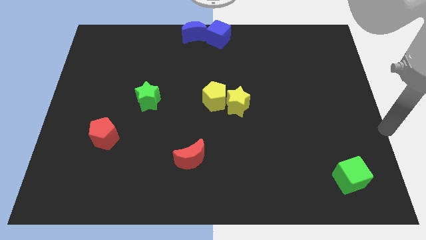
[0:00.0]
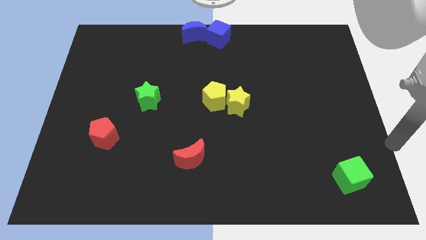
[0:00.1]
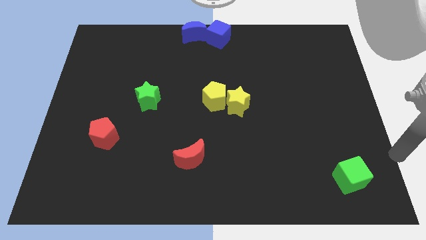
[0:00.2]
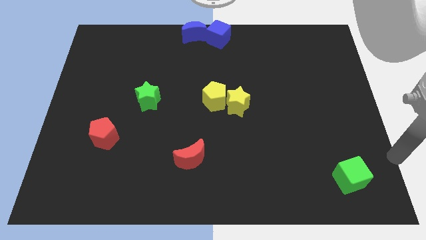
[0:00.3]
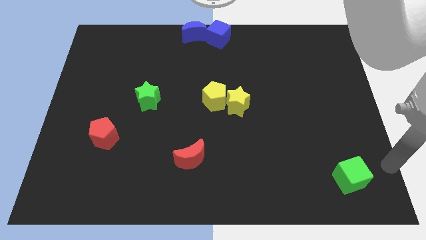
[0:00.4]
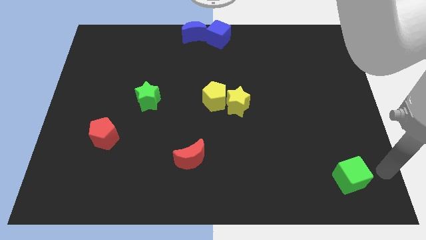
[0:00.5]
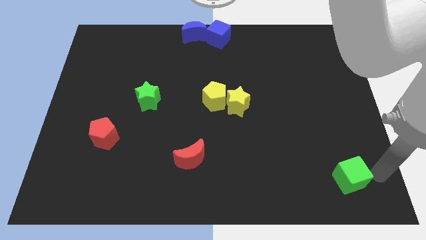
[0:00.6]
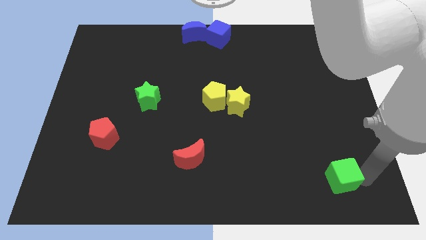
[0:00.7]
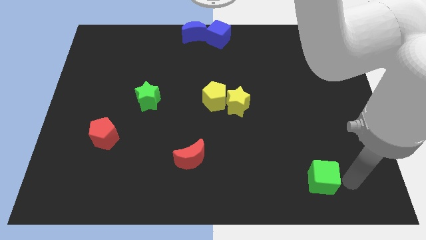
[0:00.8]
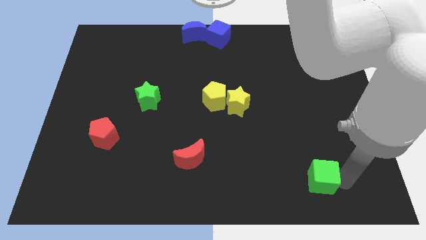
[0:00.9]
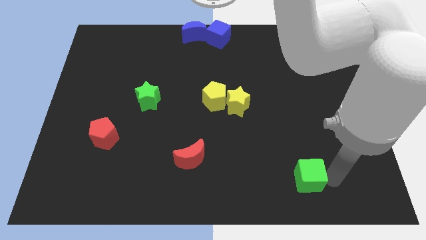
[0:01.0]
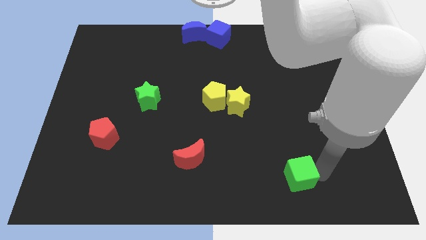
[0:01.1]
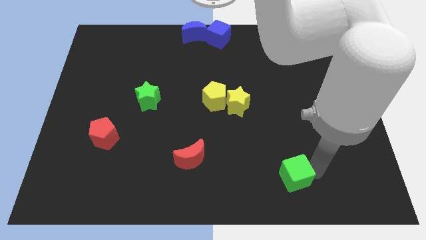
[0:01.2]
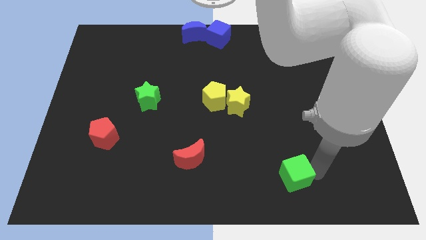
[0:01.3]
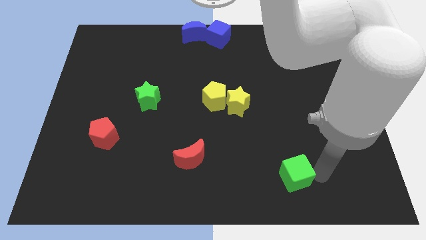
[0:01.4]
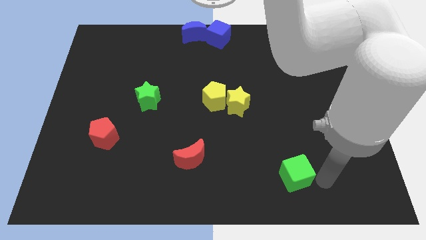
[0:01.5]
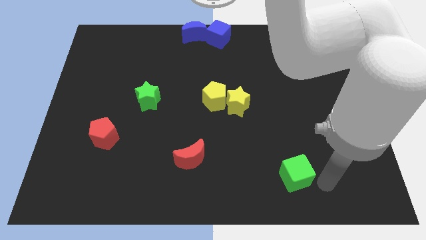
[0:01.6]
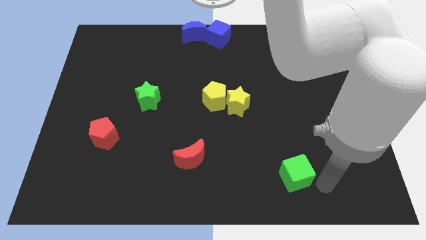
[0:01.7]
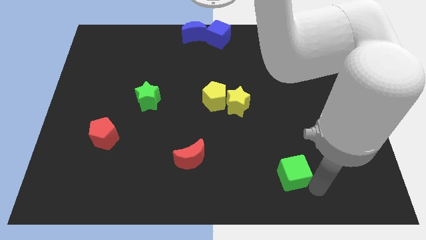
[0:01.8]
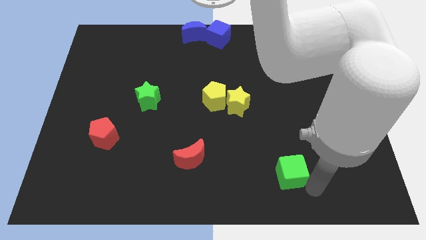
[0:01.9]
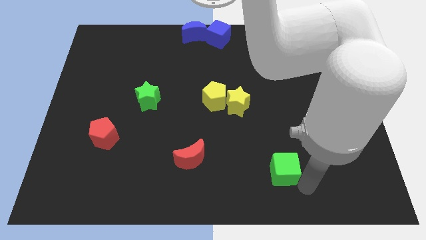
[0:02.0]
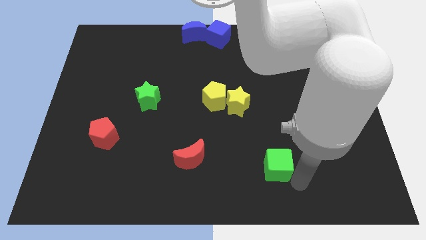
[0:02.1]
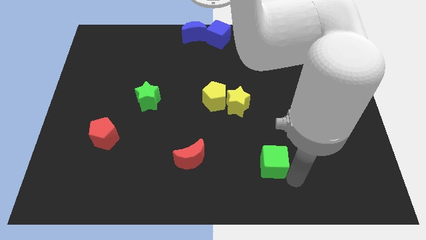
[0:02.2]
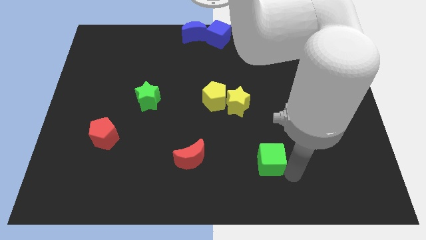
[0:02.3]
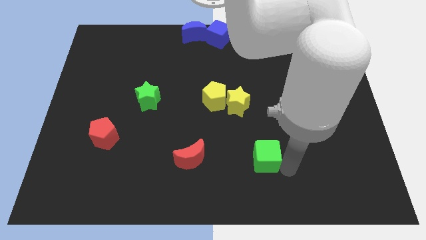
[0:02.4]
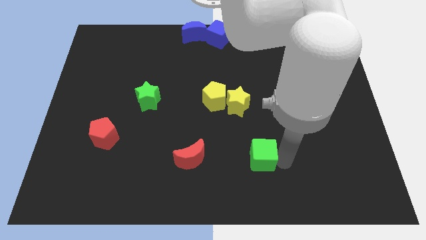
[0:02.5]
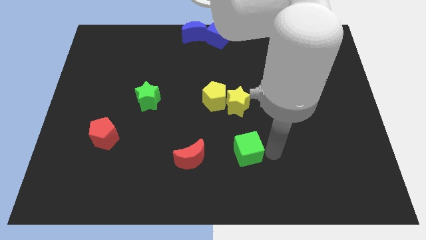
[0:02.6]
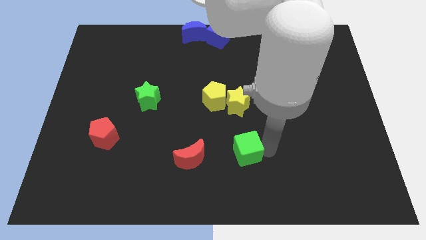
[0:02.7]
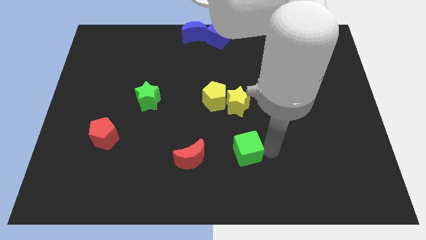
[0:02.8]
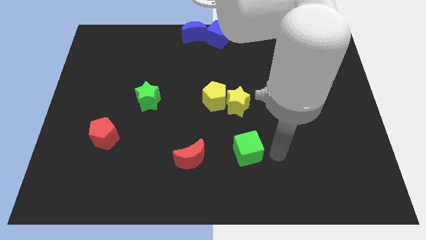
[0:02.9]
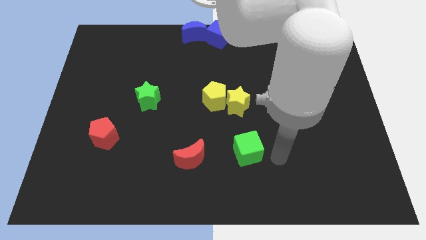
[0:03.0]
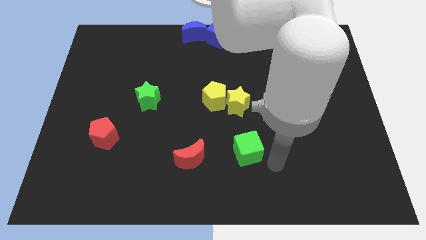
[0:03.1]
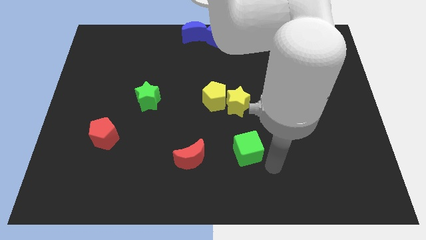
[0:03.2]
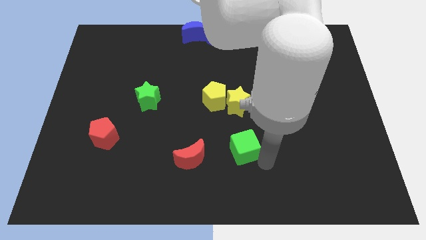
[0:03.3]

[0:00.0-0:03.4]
place the green cube to the horizontal right side of the red crescent

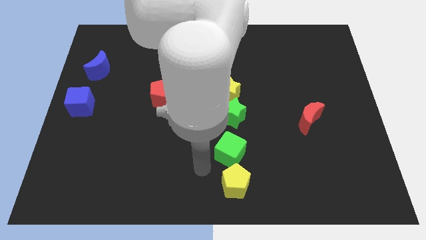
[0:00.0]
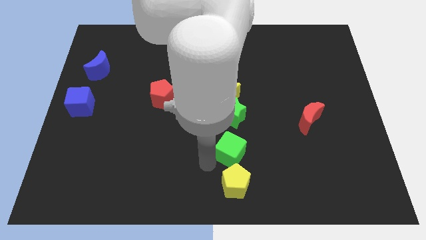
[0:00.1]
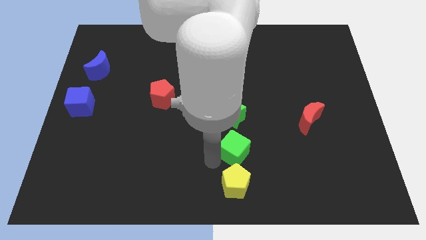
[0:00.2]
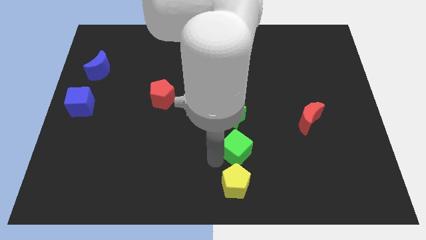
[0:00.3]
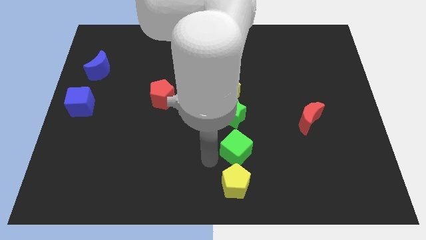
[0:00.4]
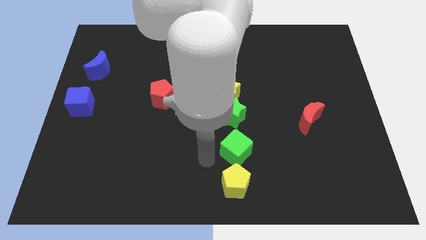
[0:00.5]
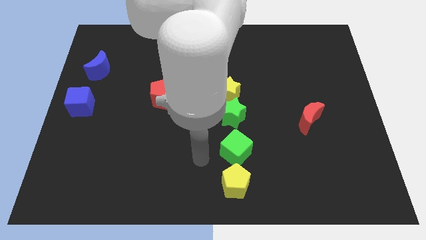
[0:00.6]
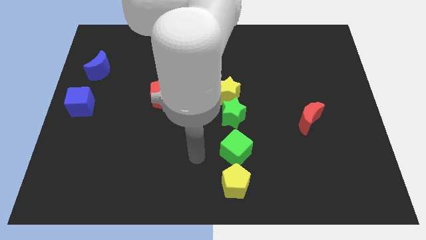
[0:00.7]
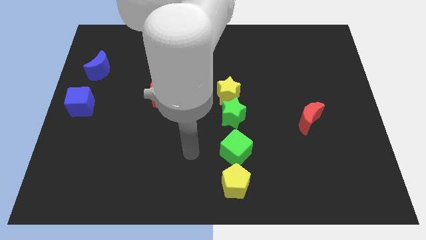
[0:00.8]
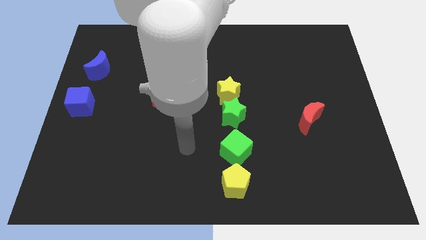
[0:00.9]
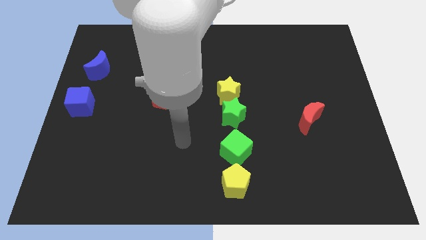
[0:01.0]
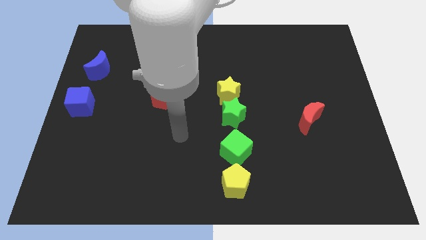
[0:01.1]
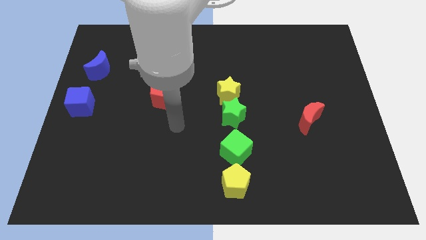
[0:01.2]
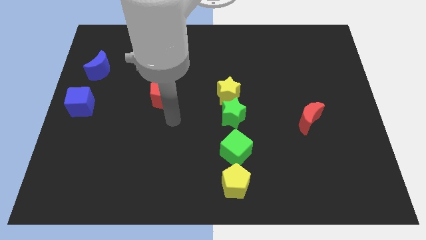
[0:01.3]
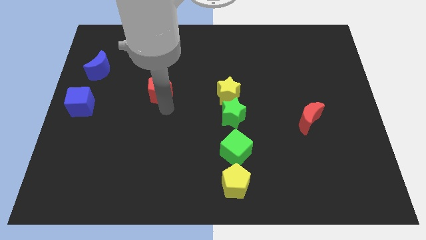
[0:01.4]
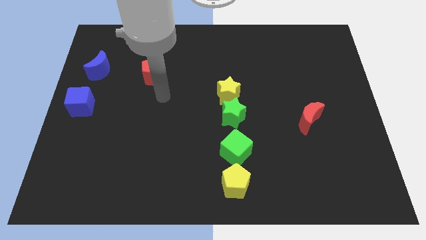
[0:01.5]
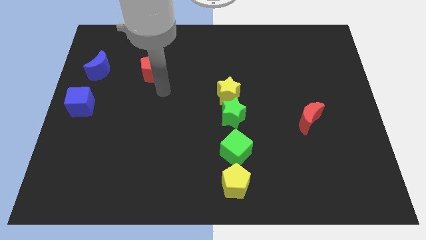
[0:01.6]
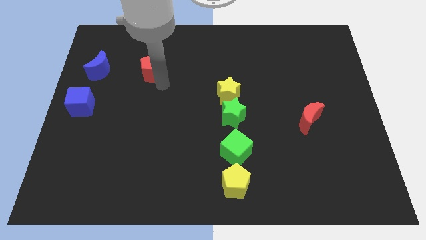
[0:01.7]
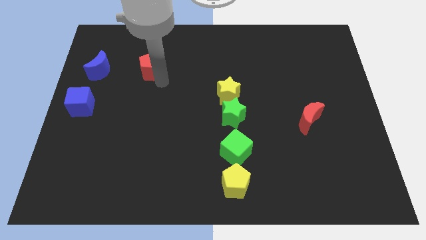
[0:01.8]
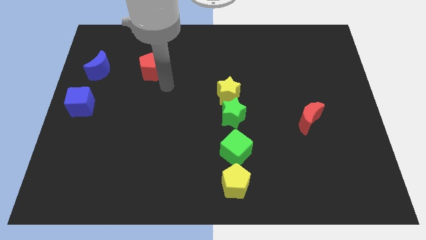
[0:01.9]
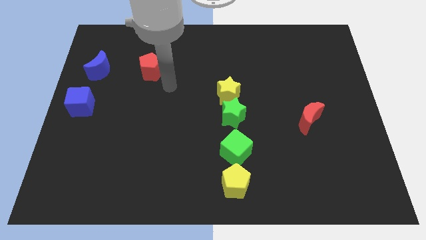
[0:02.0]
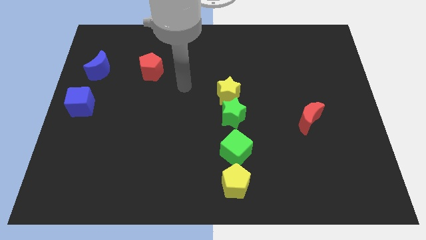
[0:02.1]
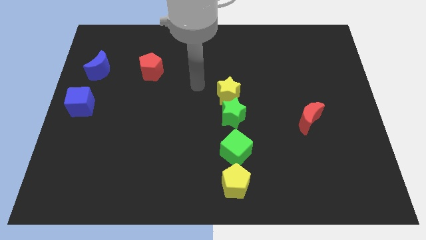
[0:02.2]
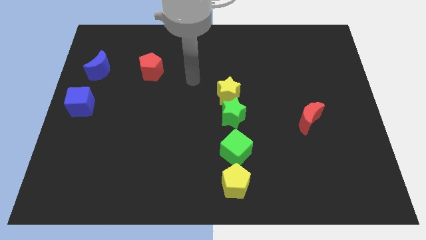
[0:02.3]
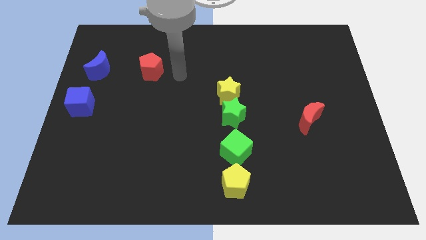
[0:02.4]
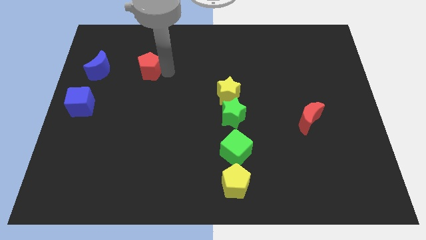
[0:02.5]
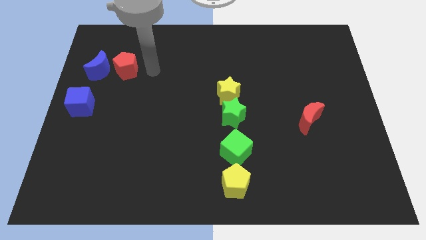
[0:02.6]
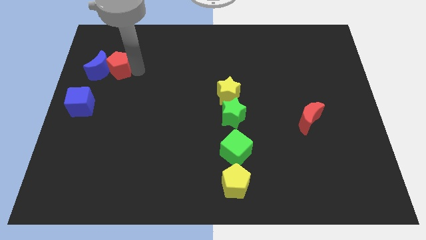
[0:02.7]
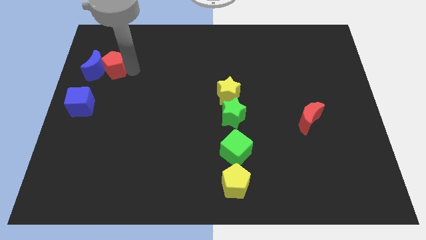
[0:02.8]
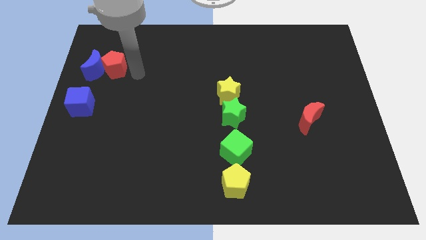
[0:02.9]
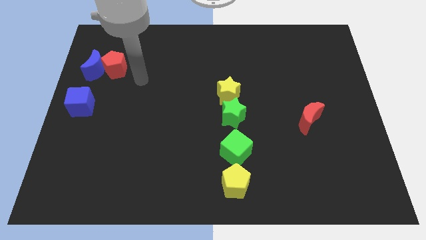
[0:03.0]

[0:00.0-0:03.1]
push the red pentagon into the blue crescent

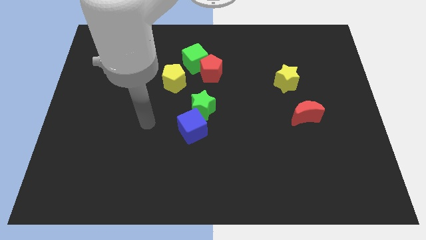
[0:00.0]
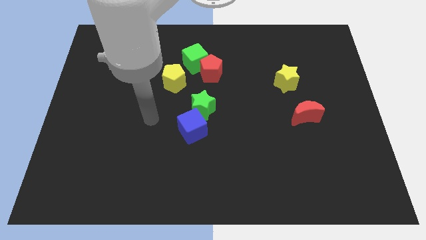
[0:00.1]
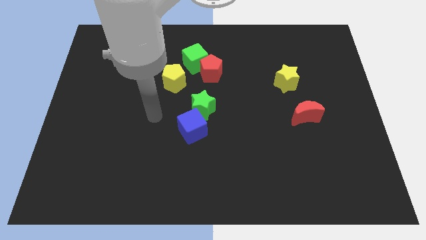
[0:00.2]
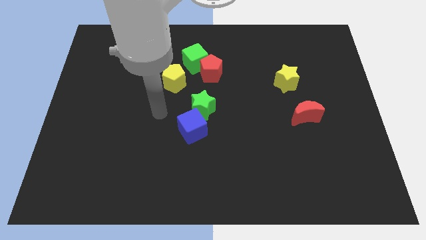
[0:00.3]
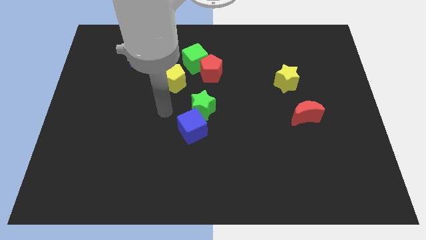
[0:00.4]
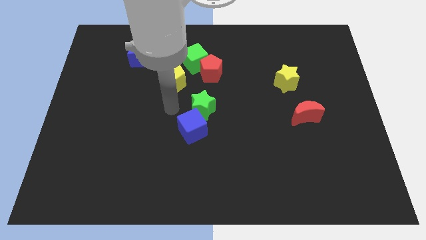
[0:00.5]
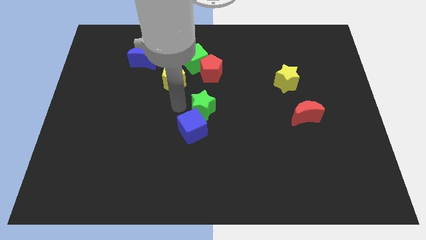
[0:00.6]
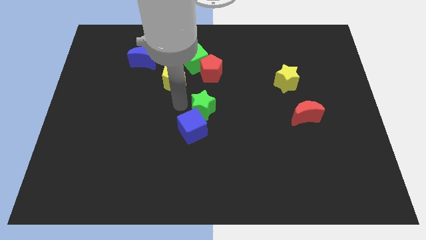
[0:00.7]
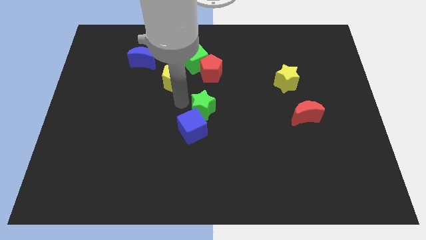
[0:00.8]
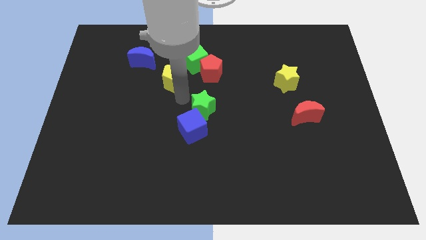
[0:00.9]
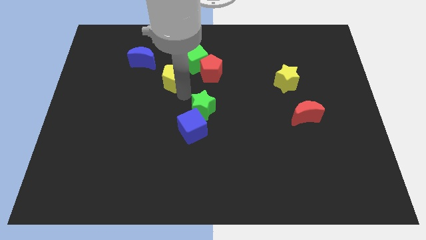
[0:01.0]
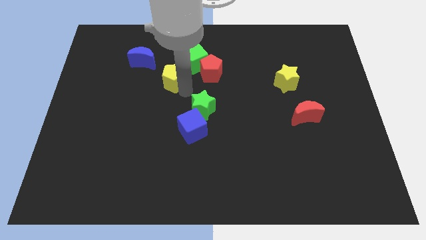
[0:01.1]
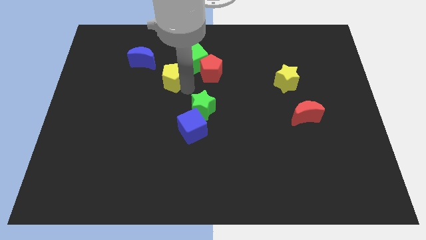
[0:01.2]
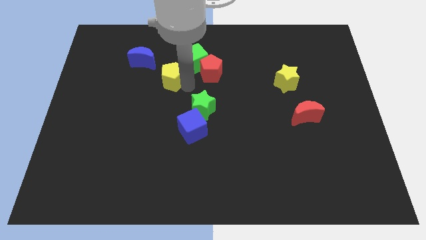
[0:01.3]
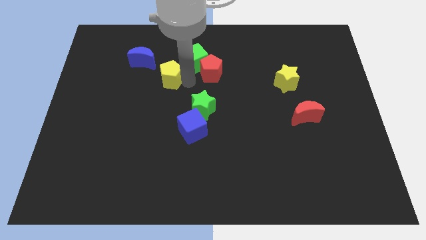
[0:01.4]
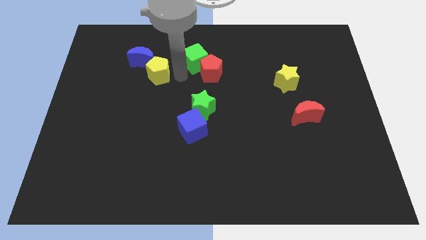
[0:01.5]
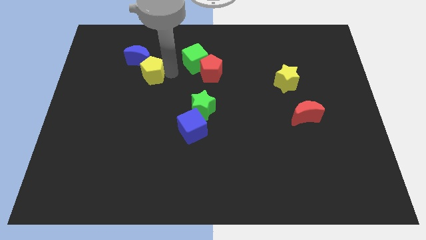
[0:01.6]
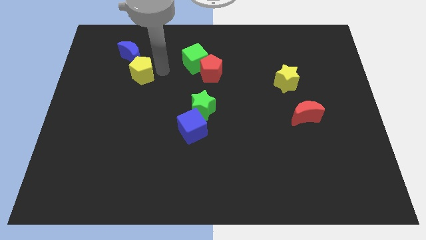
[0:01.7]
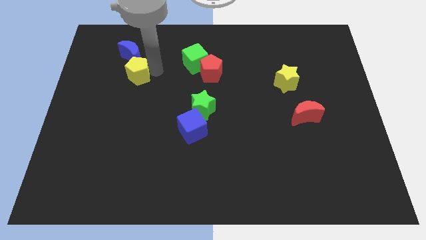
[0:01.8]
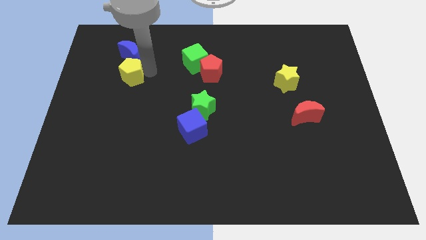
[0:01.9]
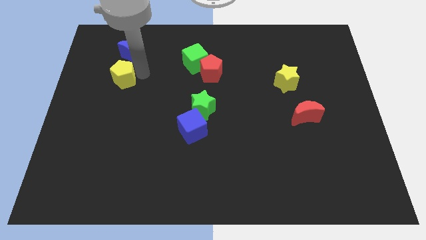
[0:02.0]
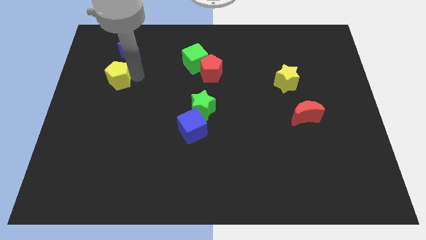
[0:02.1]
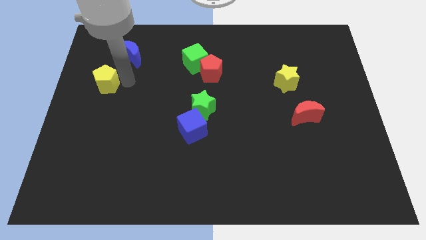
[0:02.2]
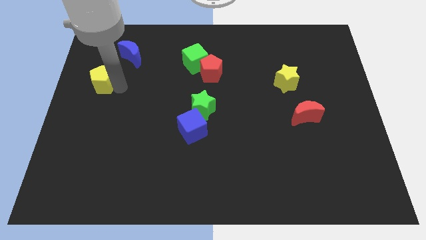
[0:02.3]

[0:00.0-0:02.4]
move the yellow pentagon slightly to left side
